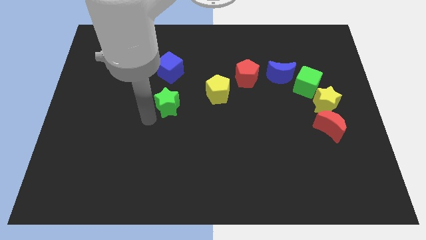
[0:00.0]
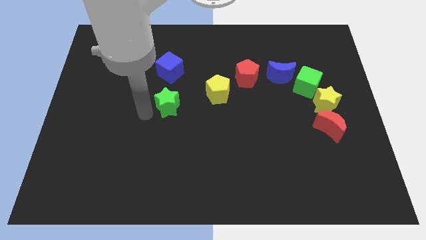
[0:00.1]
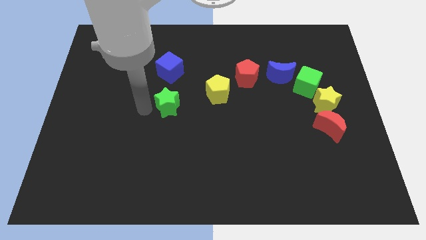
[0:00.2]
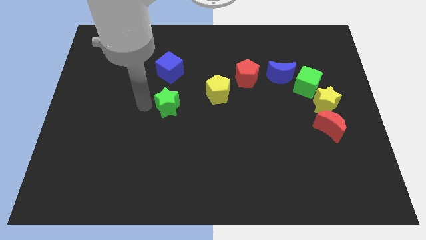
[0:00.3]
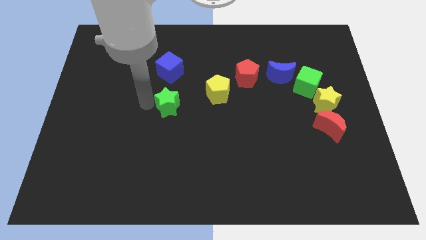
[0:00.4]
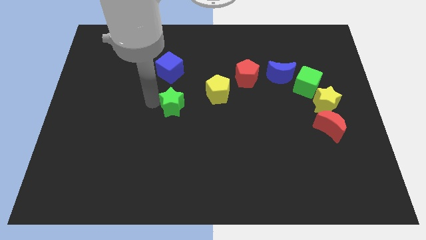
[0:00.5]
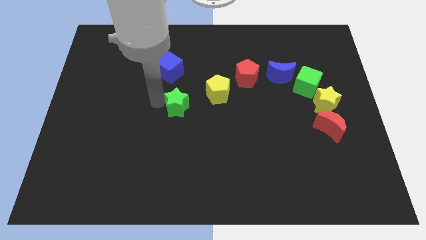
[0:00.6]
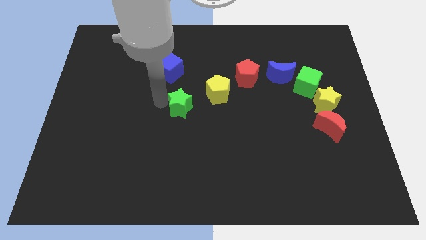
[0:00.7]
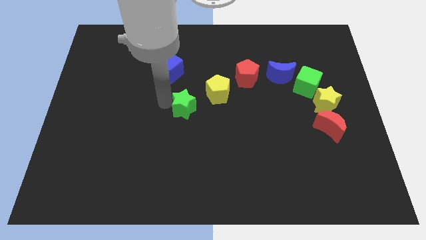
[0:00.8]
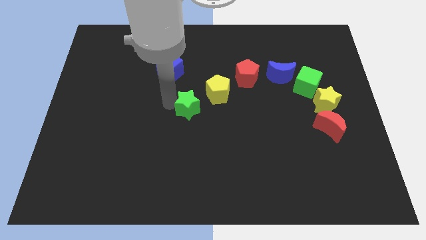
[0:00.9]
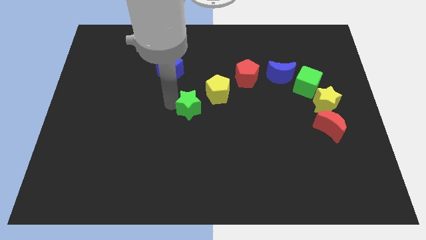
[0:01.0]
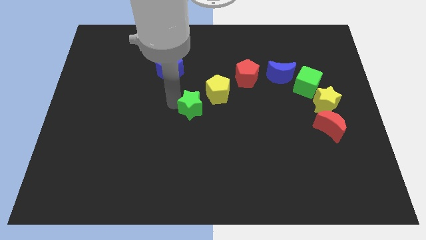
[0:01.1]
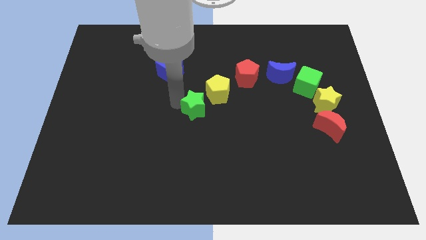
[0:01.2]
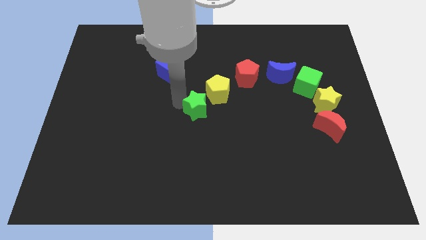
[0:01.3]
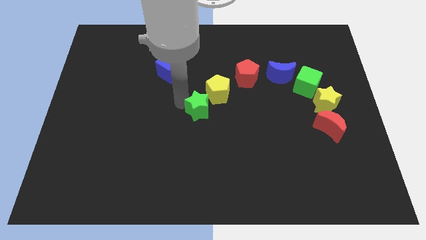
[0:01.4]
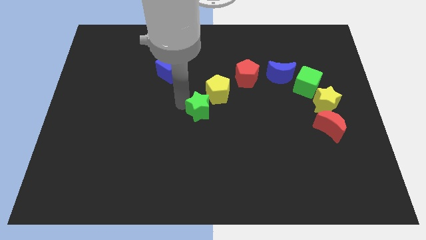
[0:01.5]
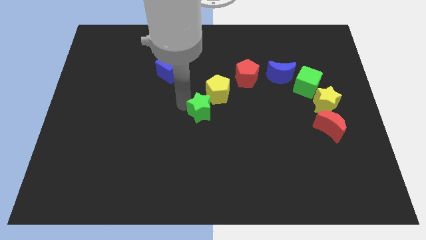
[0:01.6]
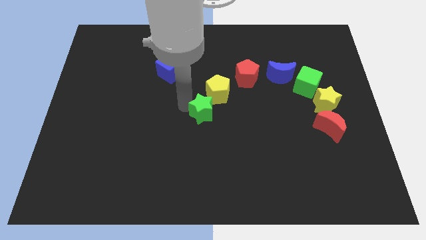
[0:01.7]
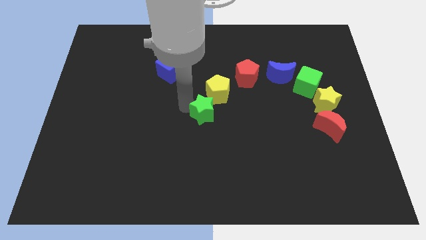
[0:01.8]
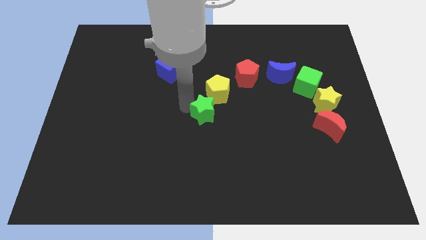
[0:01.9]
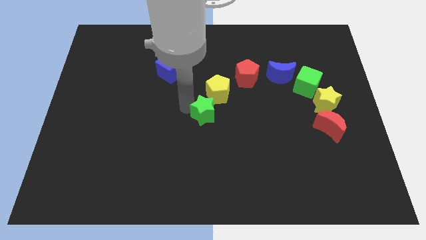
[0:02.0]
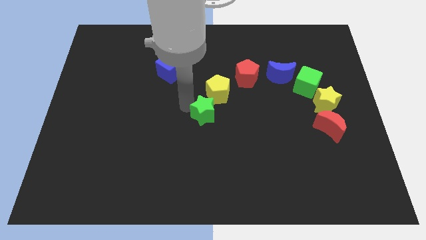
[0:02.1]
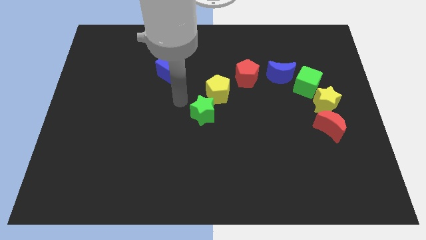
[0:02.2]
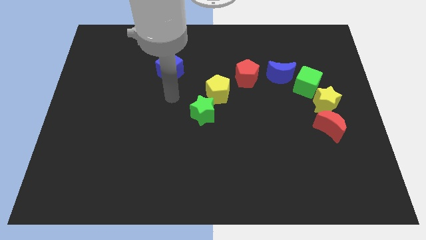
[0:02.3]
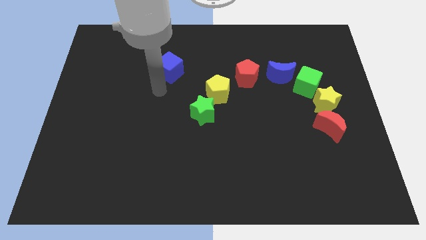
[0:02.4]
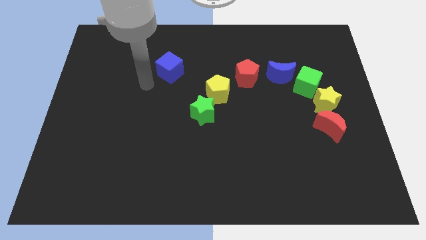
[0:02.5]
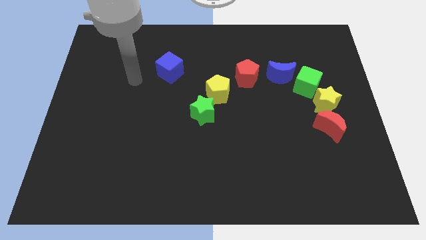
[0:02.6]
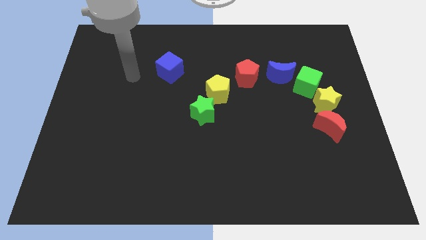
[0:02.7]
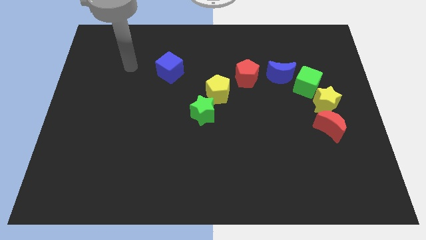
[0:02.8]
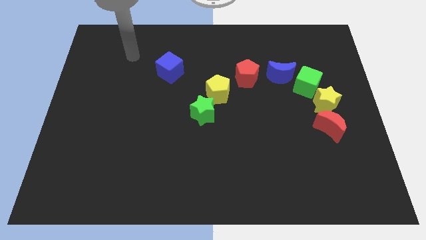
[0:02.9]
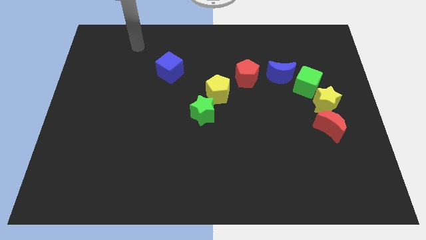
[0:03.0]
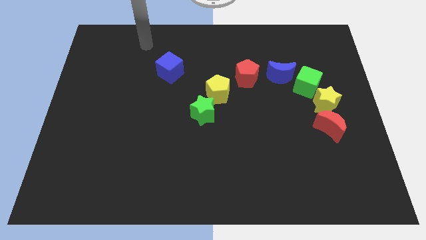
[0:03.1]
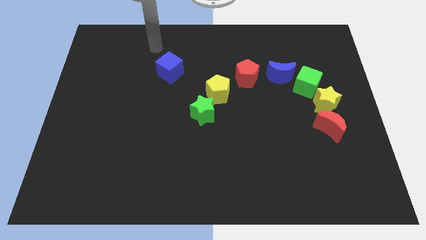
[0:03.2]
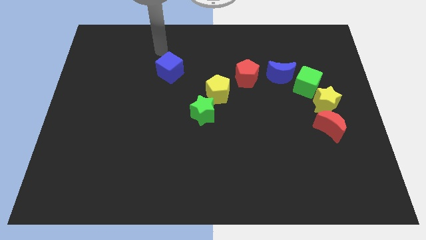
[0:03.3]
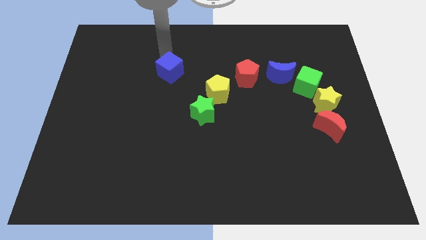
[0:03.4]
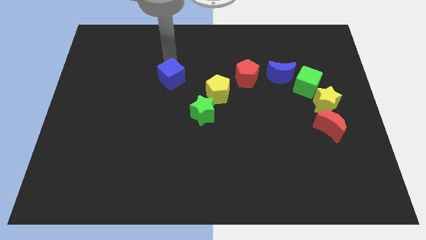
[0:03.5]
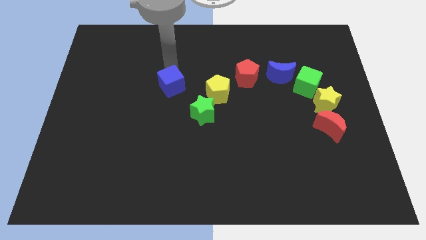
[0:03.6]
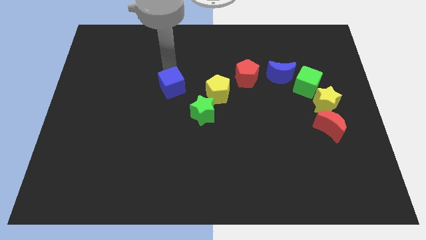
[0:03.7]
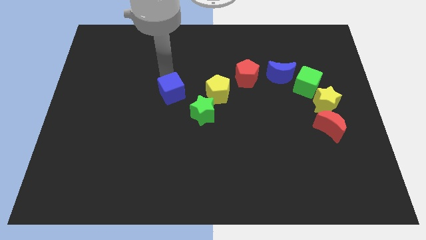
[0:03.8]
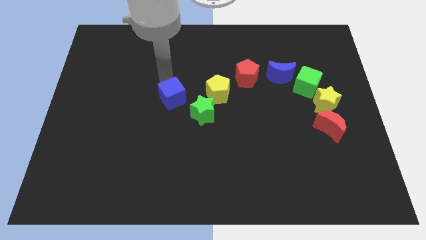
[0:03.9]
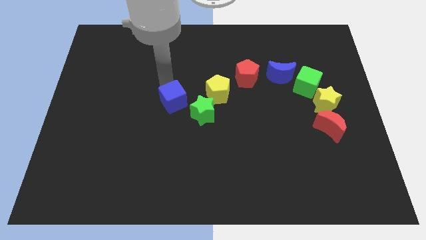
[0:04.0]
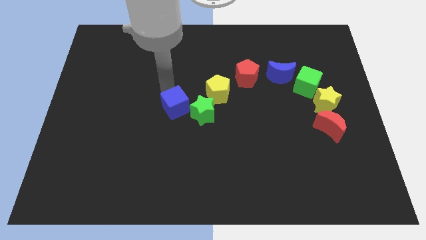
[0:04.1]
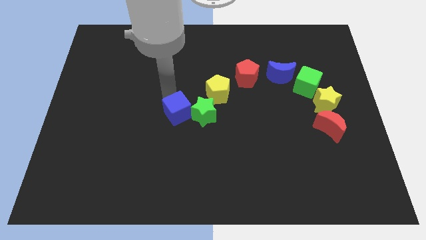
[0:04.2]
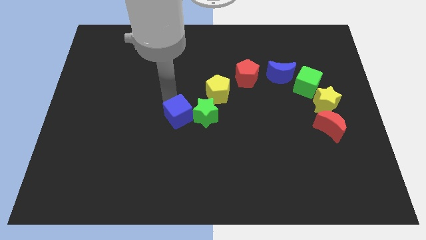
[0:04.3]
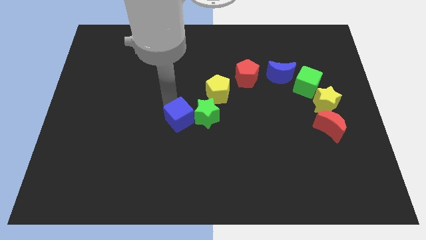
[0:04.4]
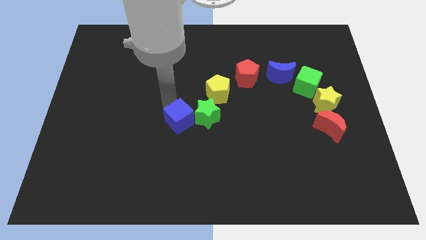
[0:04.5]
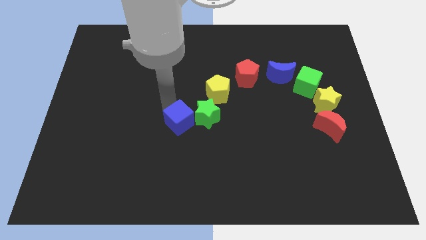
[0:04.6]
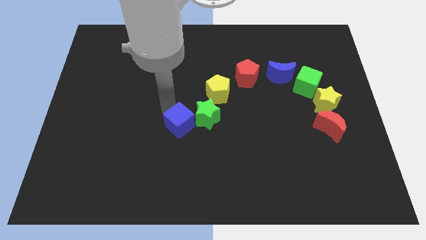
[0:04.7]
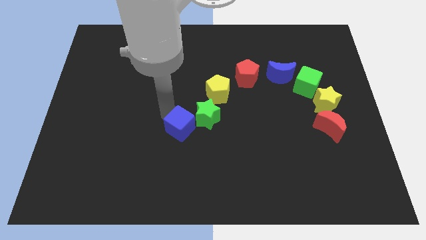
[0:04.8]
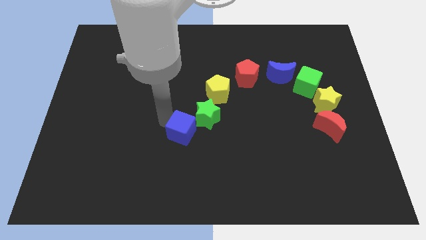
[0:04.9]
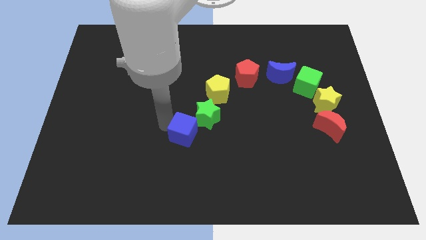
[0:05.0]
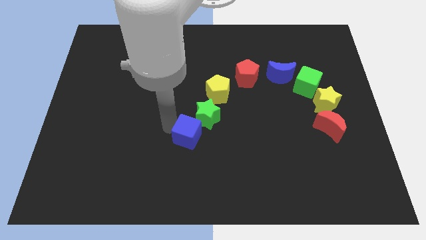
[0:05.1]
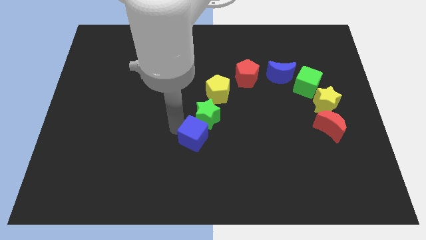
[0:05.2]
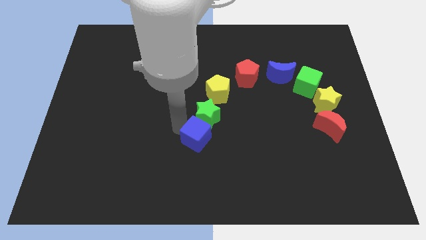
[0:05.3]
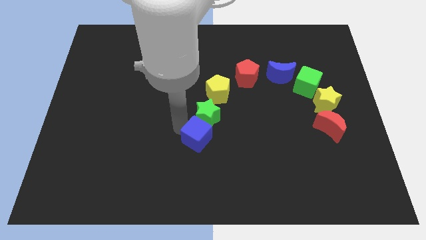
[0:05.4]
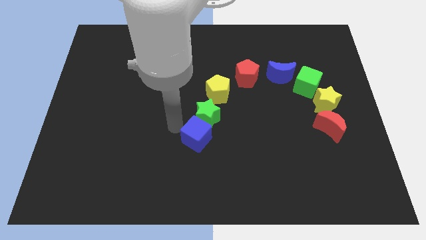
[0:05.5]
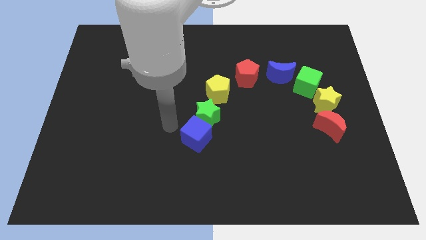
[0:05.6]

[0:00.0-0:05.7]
move the green star to the right

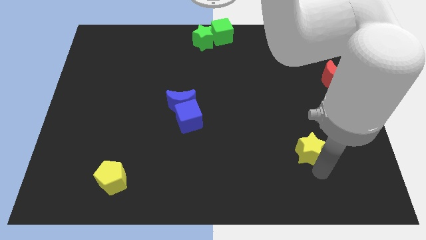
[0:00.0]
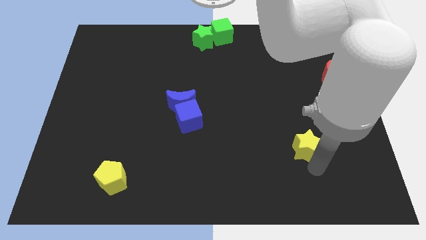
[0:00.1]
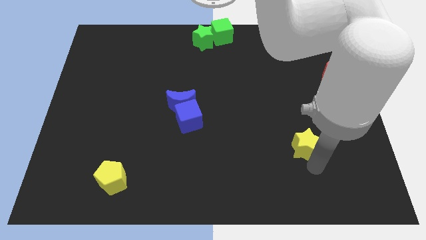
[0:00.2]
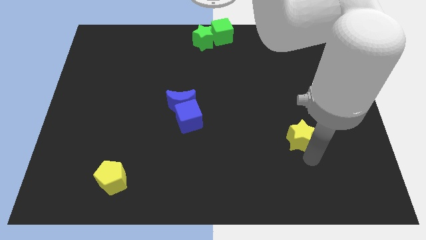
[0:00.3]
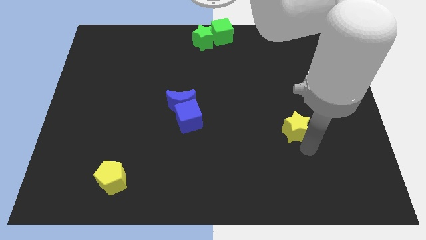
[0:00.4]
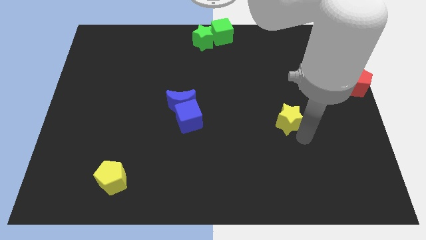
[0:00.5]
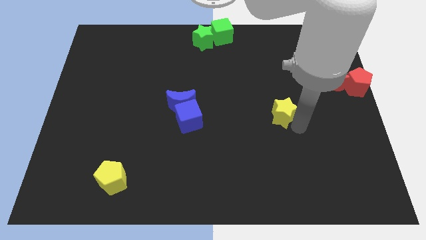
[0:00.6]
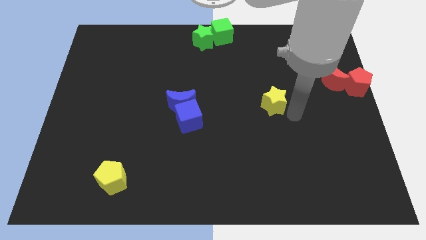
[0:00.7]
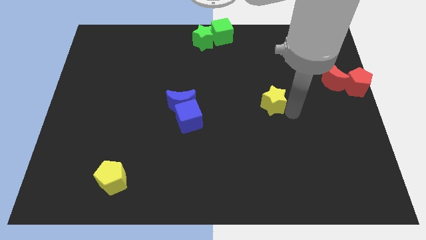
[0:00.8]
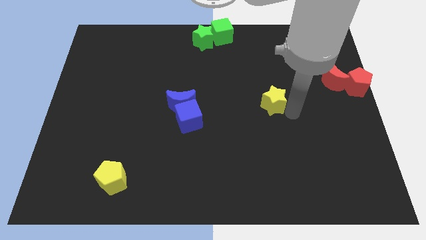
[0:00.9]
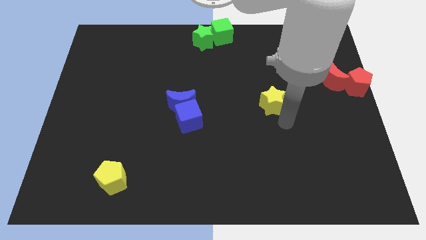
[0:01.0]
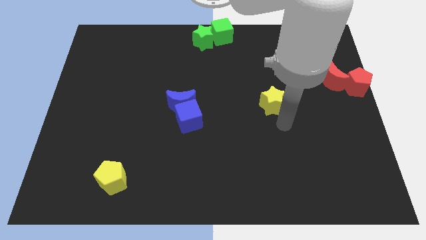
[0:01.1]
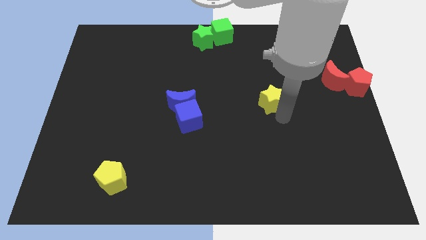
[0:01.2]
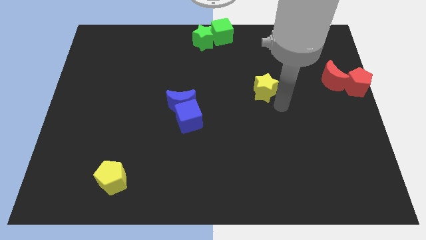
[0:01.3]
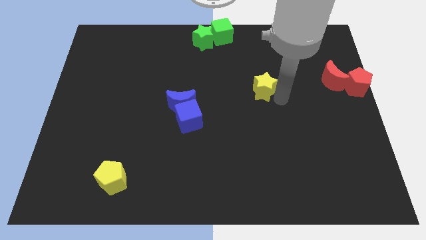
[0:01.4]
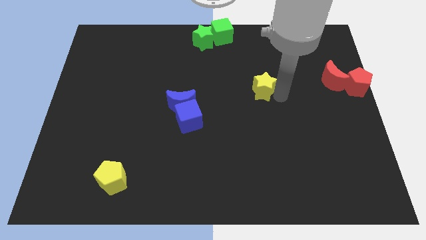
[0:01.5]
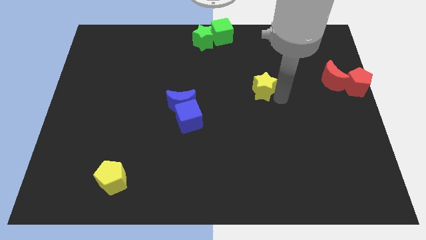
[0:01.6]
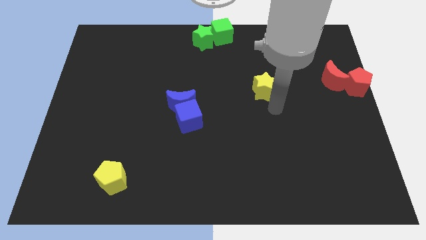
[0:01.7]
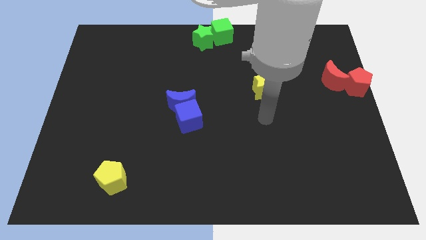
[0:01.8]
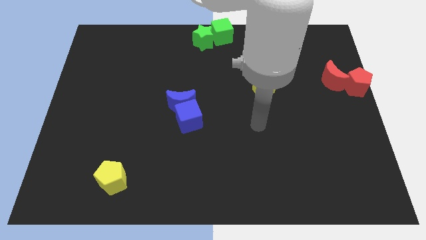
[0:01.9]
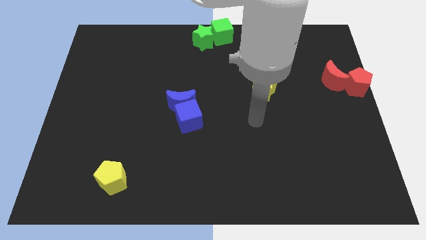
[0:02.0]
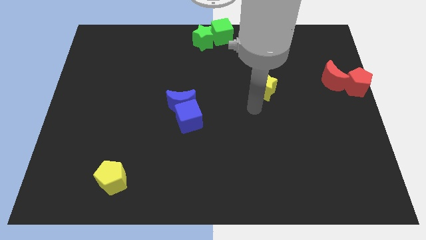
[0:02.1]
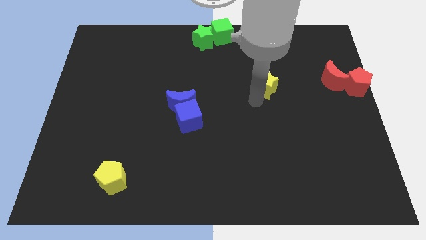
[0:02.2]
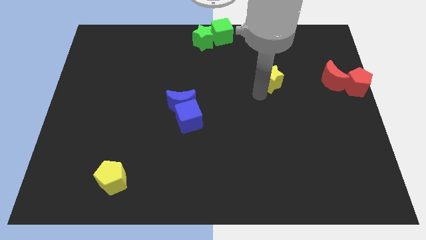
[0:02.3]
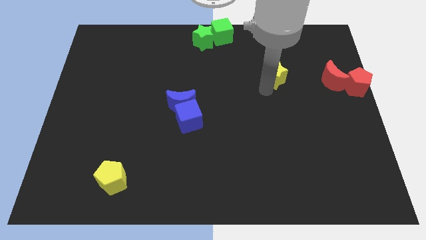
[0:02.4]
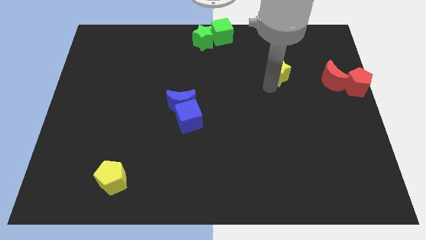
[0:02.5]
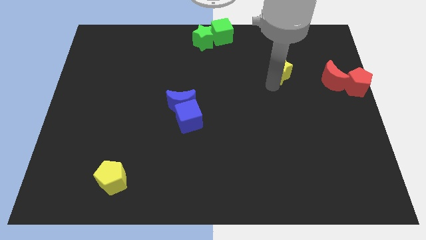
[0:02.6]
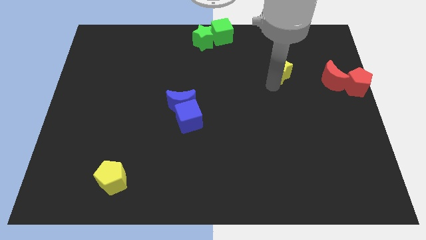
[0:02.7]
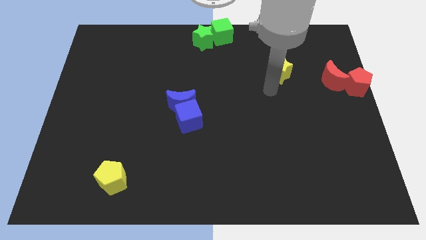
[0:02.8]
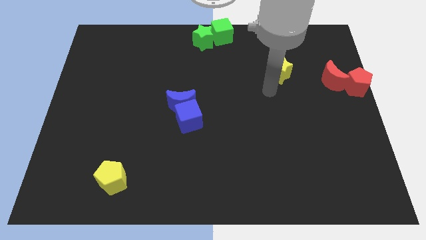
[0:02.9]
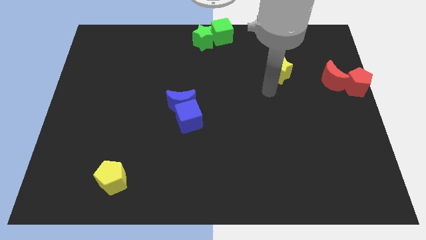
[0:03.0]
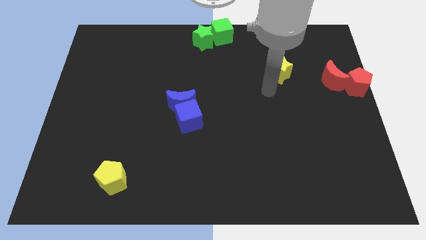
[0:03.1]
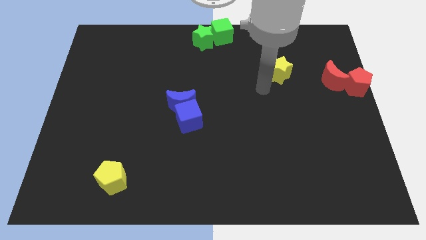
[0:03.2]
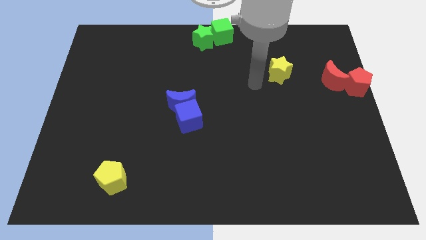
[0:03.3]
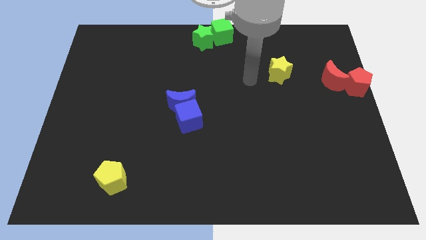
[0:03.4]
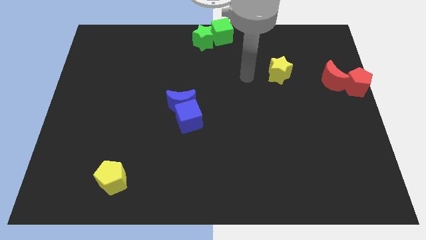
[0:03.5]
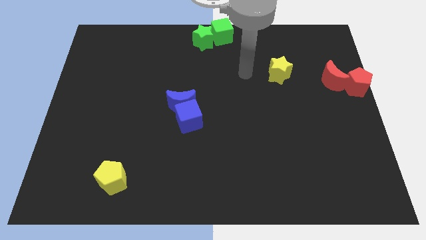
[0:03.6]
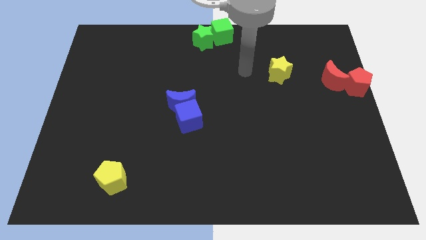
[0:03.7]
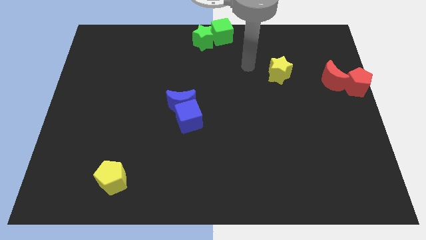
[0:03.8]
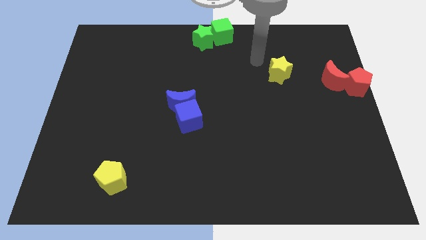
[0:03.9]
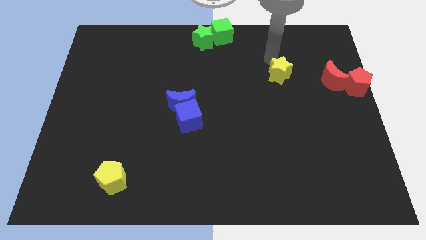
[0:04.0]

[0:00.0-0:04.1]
move the yellow pentagon parallel to the red crescent
